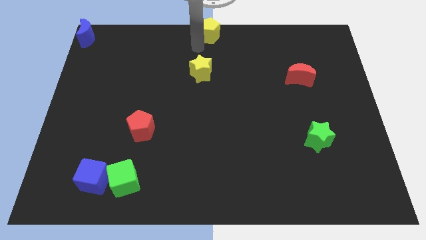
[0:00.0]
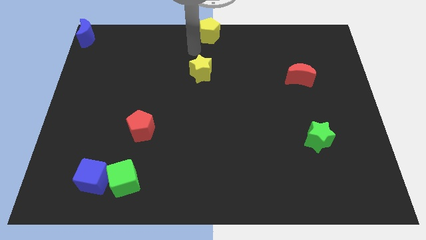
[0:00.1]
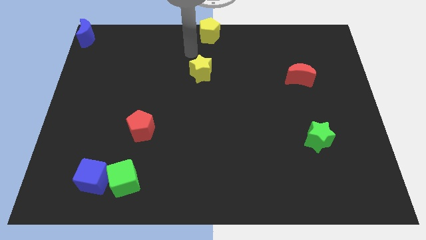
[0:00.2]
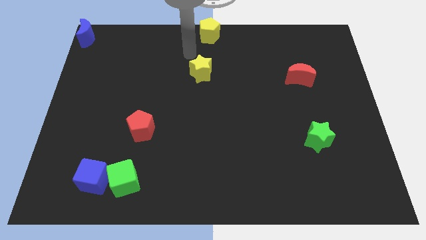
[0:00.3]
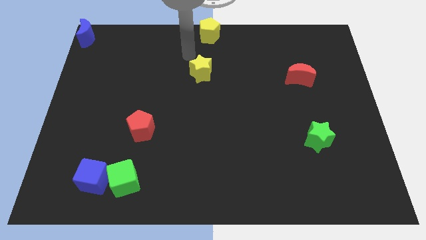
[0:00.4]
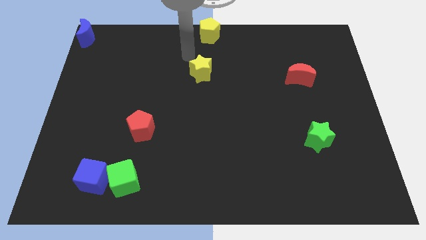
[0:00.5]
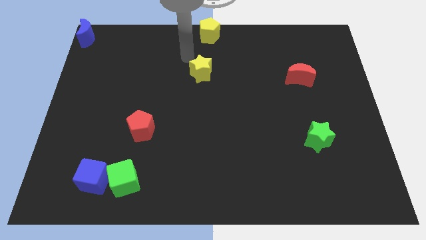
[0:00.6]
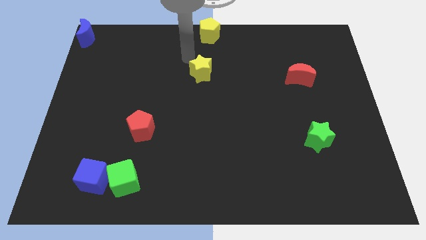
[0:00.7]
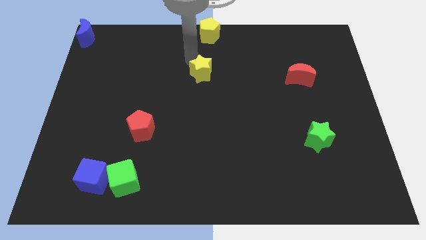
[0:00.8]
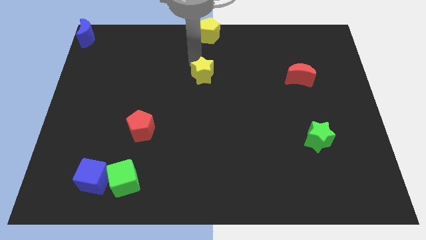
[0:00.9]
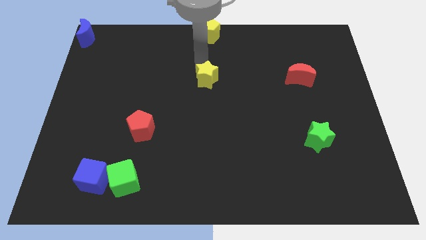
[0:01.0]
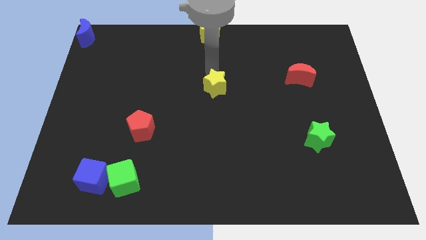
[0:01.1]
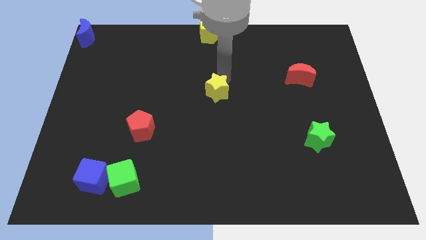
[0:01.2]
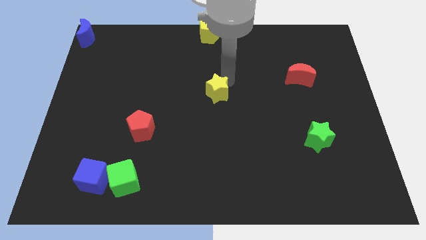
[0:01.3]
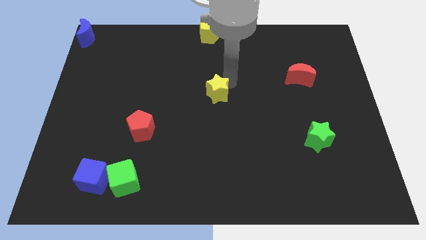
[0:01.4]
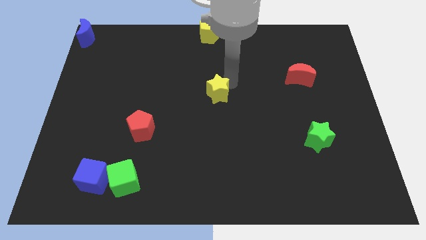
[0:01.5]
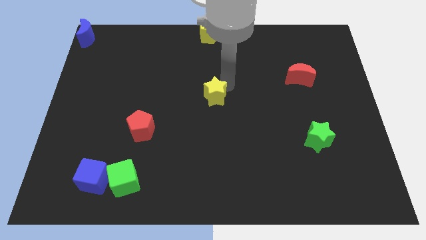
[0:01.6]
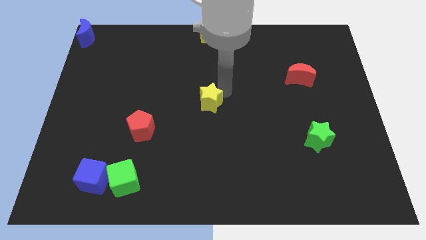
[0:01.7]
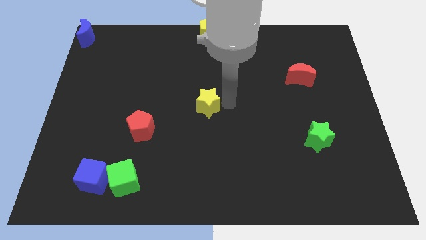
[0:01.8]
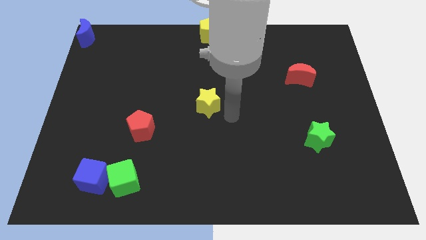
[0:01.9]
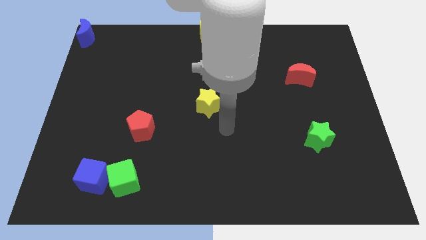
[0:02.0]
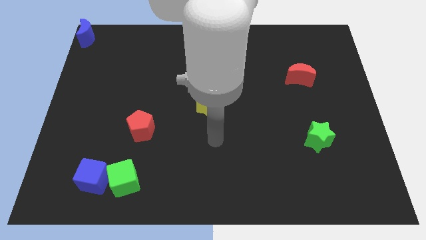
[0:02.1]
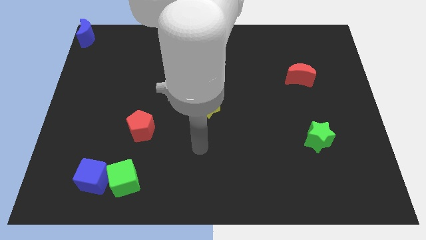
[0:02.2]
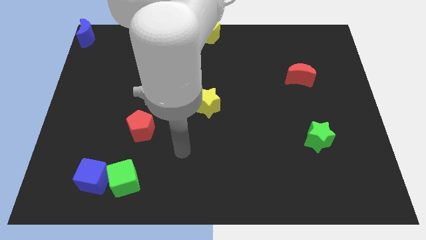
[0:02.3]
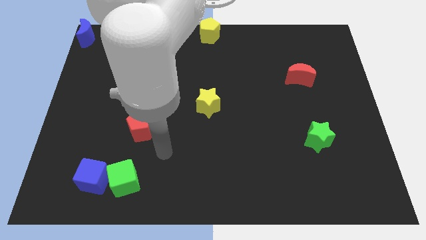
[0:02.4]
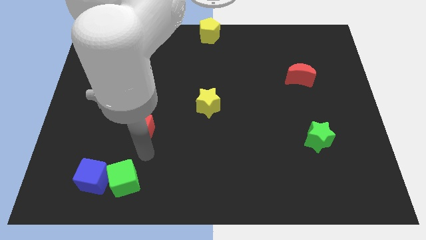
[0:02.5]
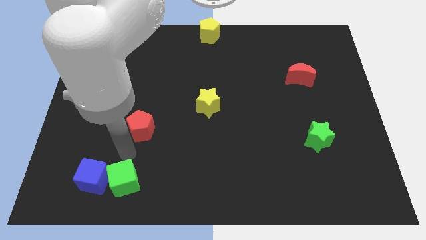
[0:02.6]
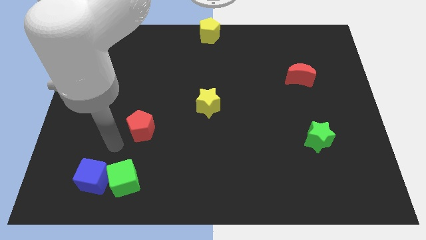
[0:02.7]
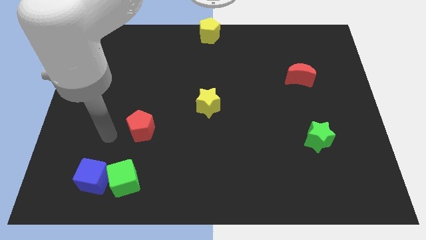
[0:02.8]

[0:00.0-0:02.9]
push the yellow star to the center of the board

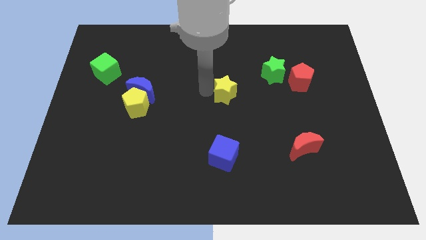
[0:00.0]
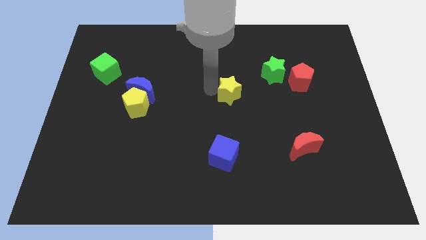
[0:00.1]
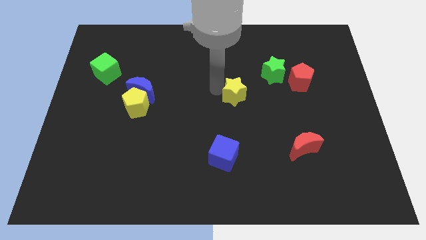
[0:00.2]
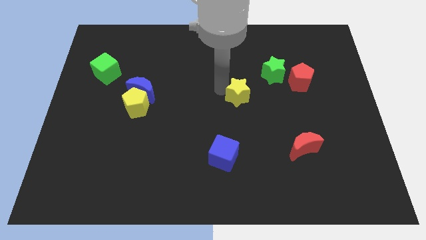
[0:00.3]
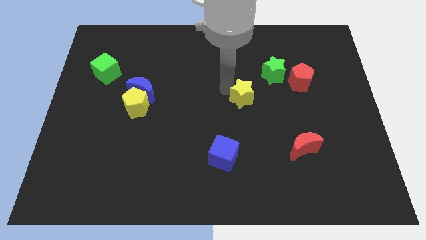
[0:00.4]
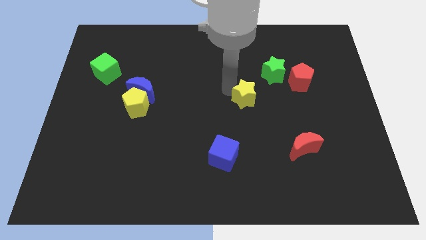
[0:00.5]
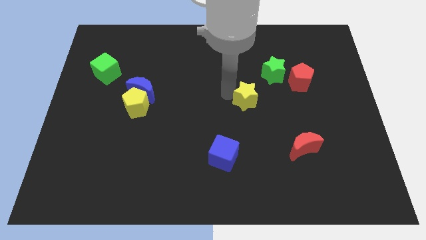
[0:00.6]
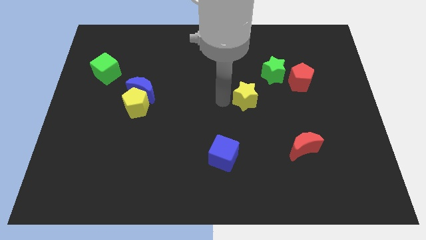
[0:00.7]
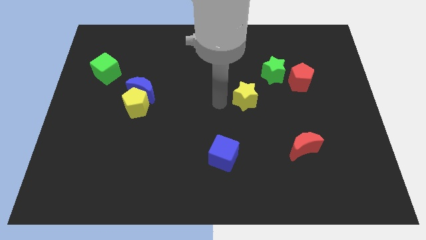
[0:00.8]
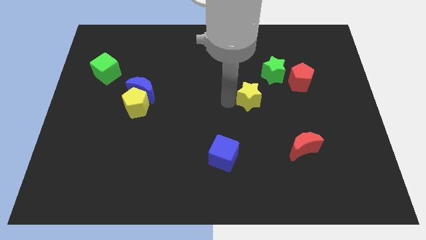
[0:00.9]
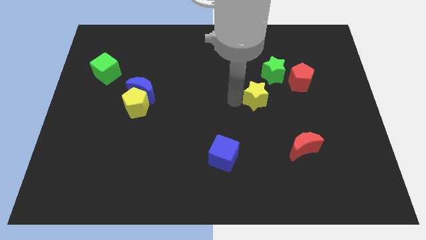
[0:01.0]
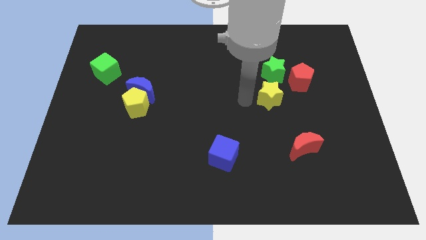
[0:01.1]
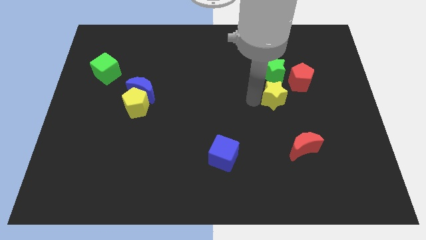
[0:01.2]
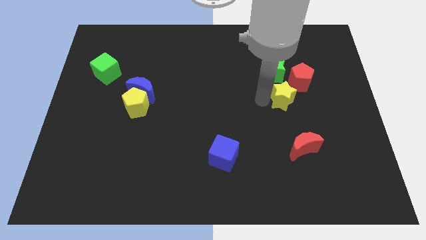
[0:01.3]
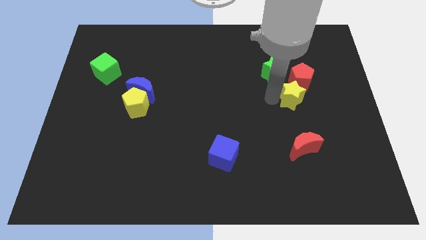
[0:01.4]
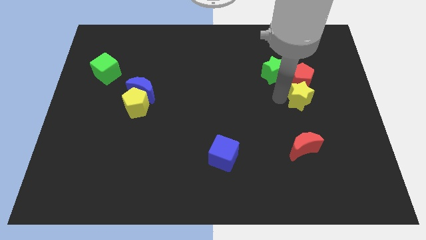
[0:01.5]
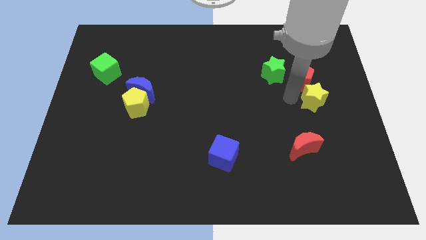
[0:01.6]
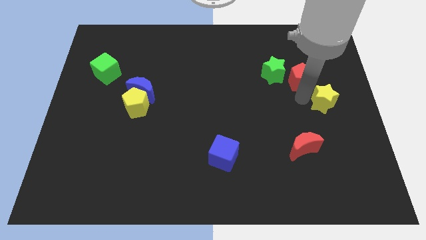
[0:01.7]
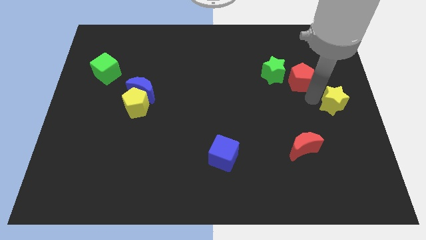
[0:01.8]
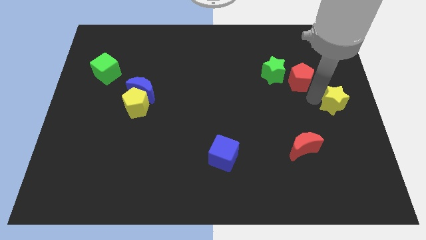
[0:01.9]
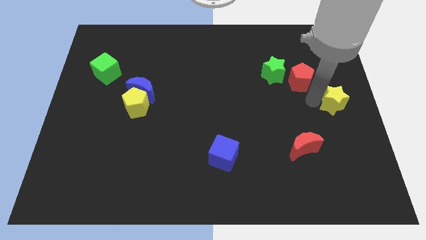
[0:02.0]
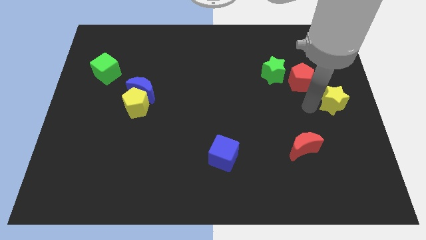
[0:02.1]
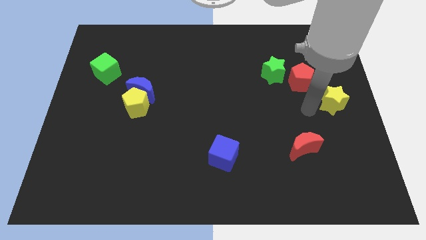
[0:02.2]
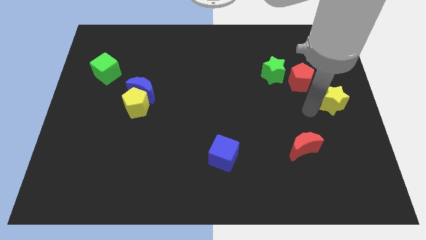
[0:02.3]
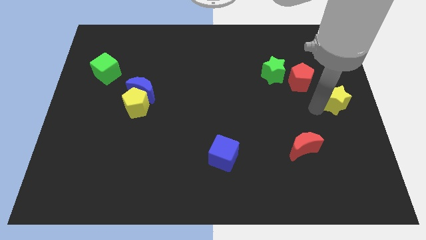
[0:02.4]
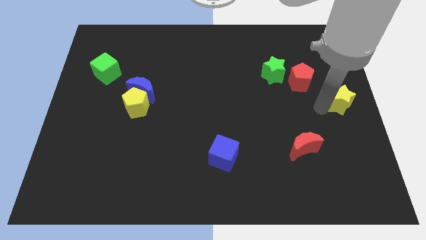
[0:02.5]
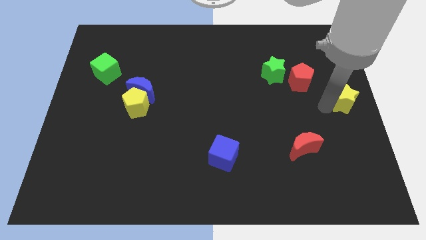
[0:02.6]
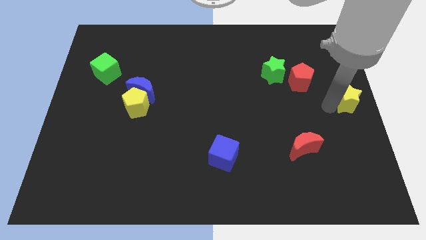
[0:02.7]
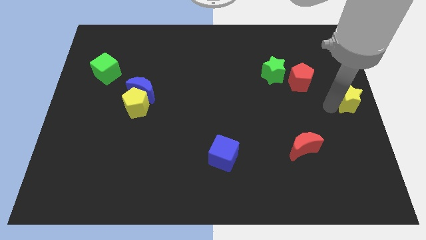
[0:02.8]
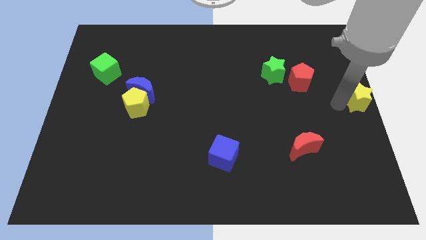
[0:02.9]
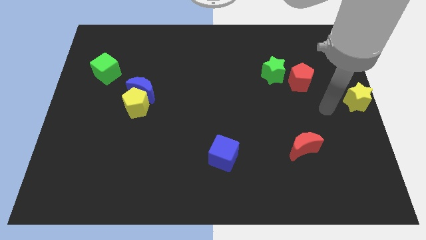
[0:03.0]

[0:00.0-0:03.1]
make a triangle out of red blocks and the yellow star

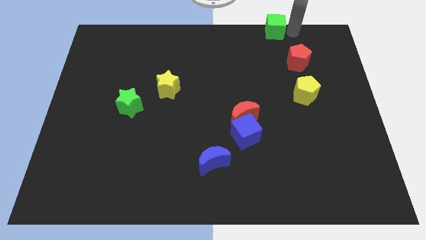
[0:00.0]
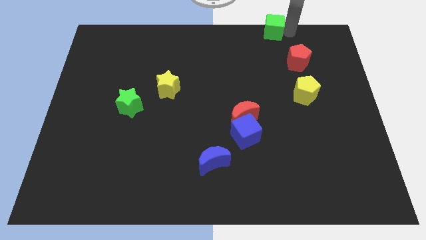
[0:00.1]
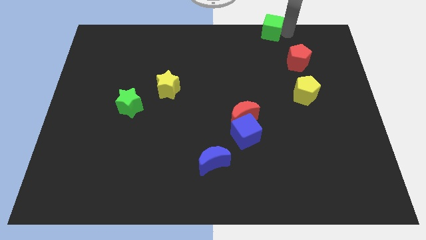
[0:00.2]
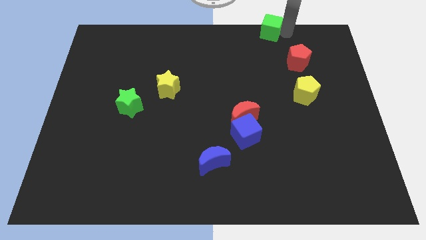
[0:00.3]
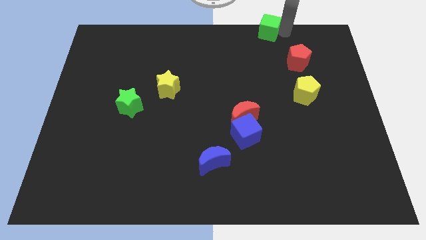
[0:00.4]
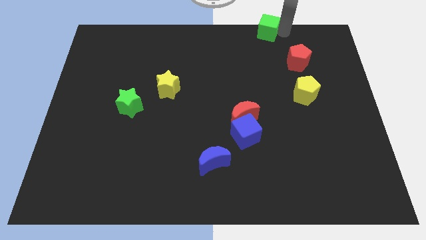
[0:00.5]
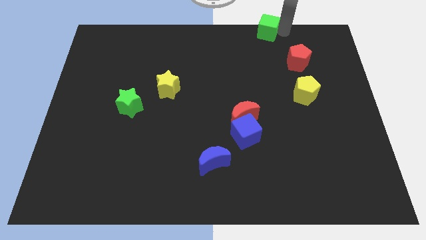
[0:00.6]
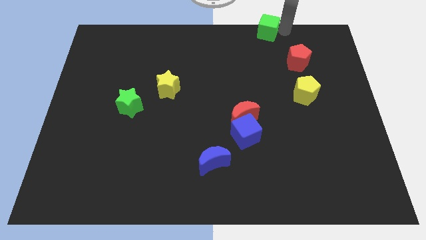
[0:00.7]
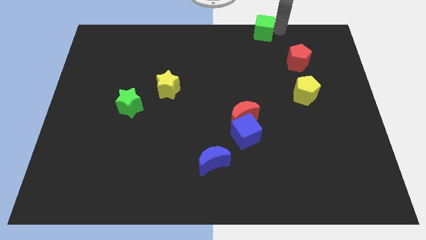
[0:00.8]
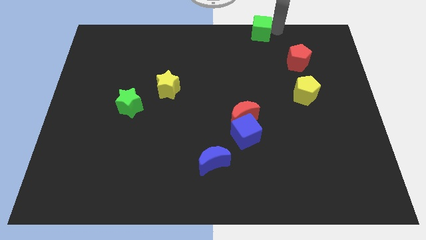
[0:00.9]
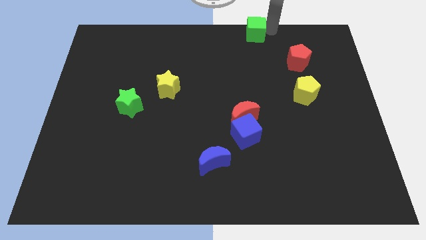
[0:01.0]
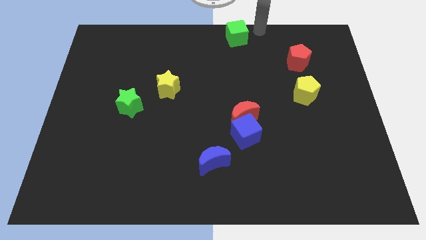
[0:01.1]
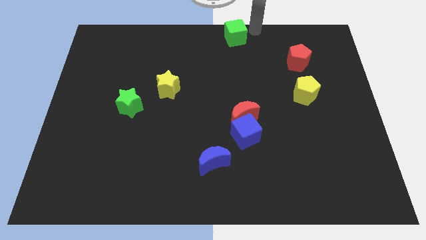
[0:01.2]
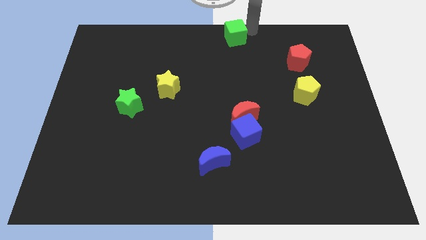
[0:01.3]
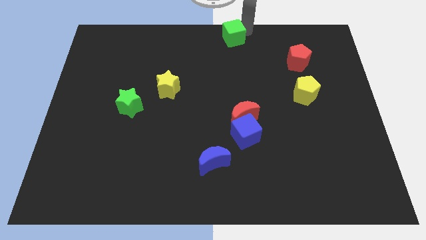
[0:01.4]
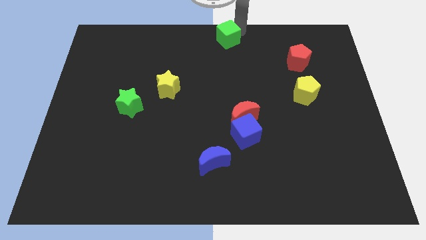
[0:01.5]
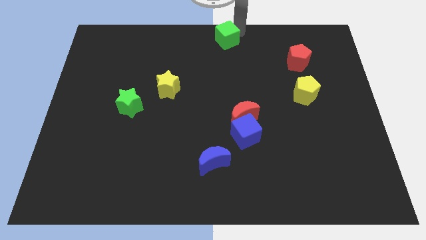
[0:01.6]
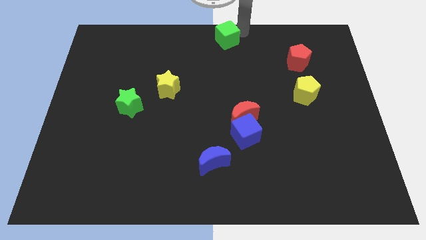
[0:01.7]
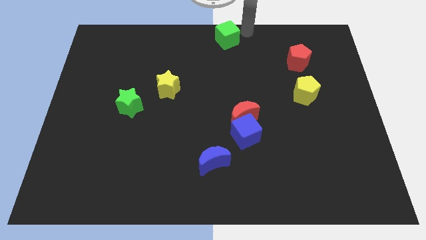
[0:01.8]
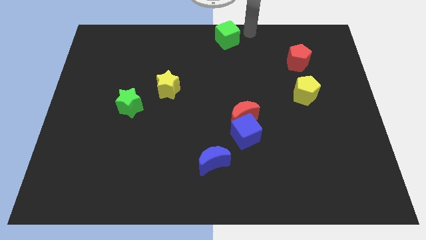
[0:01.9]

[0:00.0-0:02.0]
move the green cube towards the top center of the board

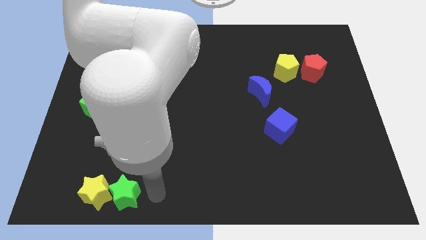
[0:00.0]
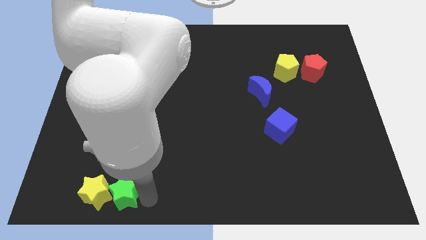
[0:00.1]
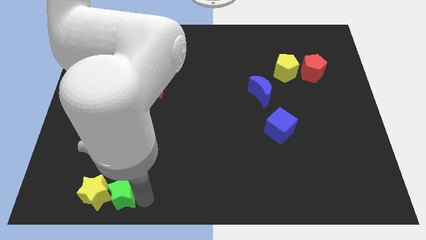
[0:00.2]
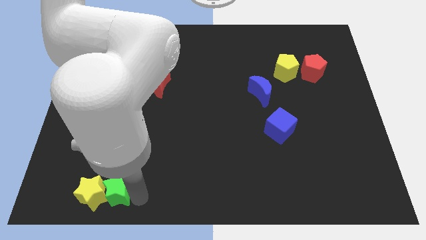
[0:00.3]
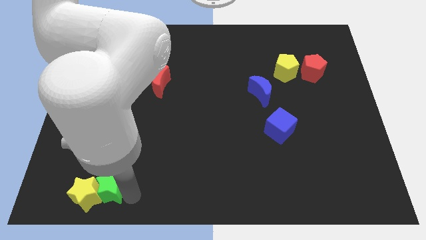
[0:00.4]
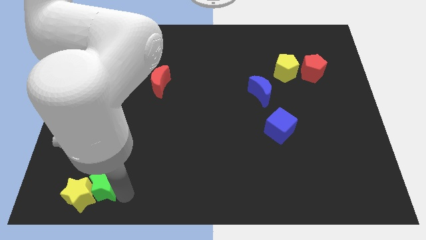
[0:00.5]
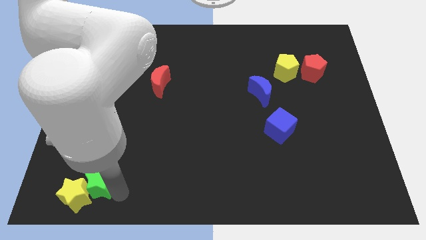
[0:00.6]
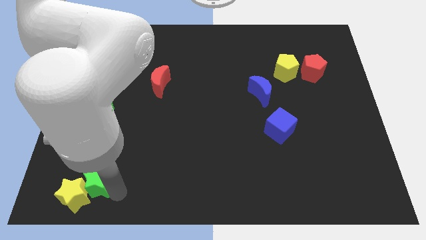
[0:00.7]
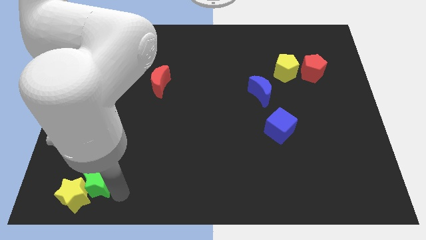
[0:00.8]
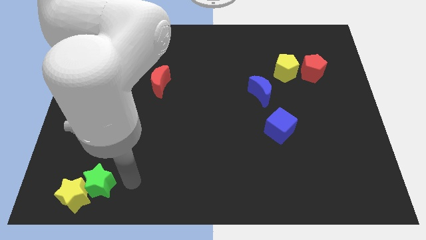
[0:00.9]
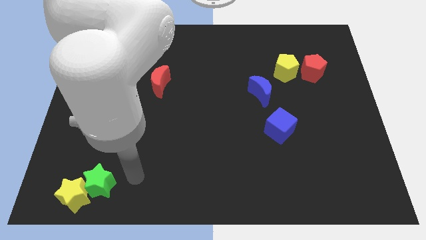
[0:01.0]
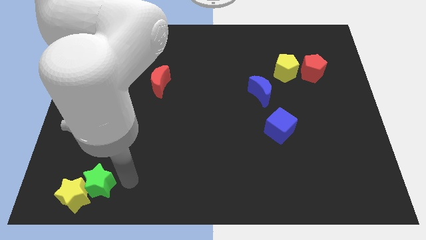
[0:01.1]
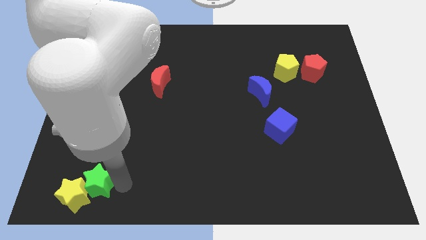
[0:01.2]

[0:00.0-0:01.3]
drag the green star along with the yellow star towards the bottom left
